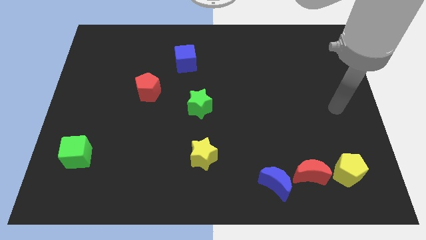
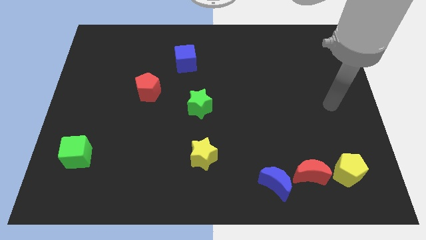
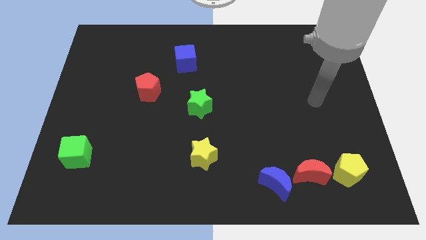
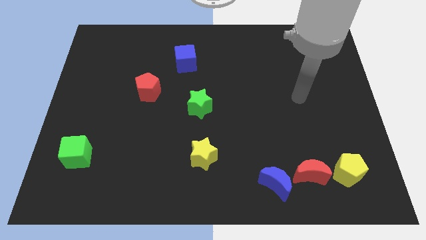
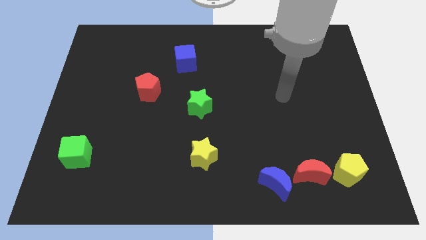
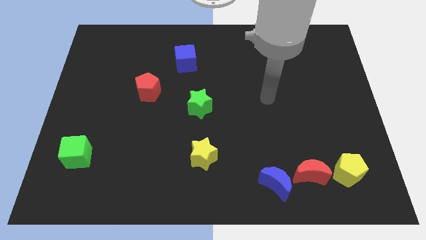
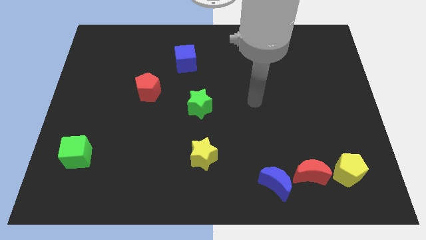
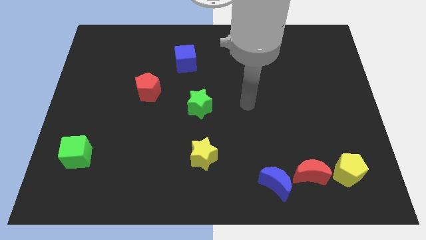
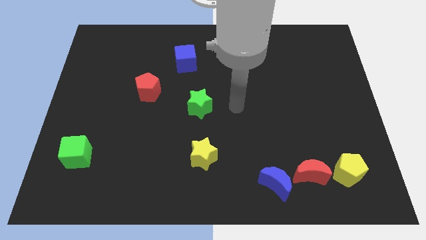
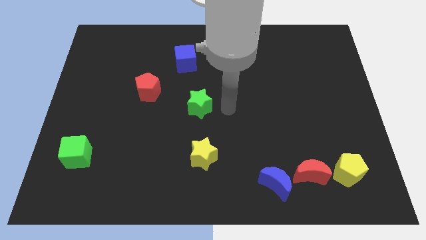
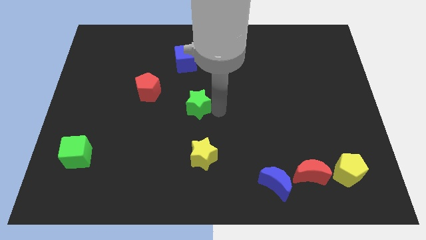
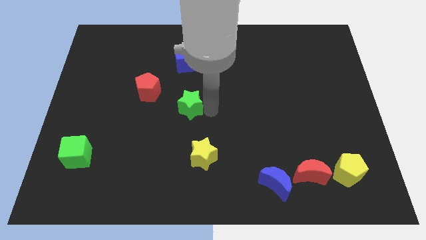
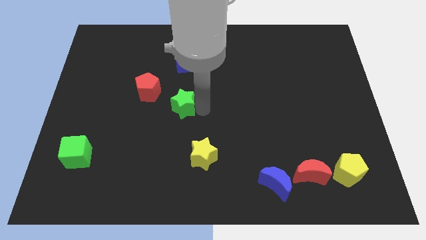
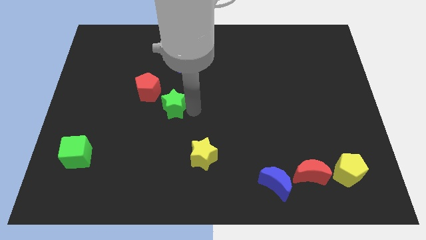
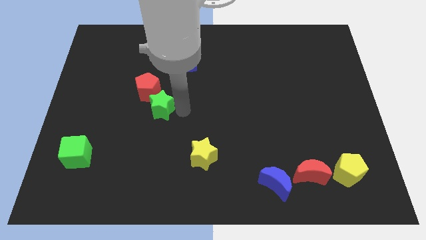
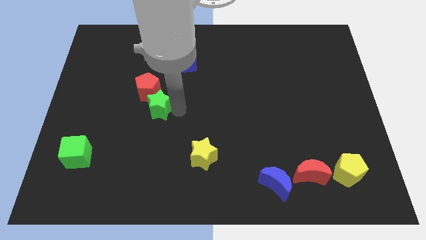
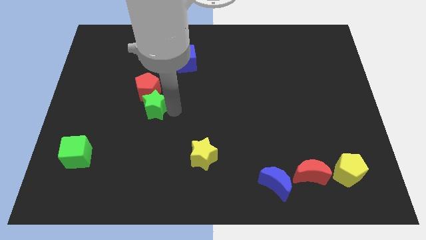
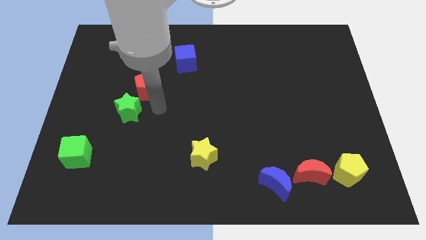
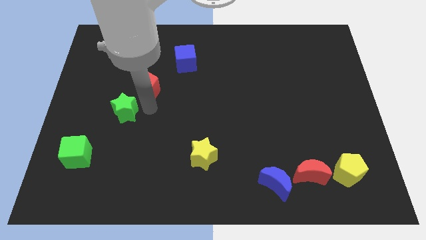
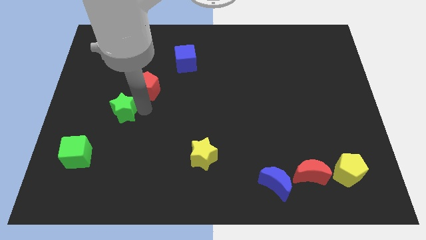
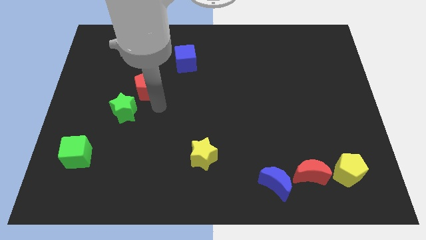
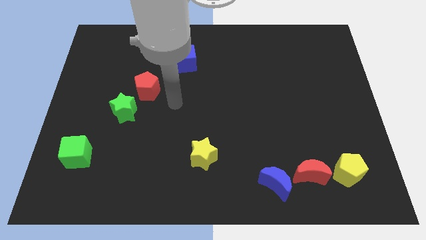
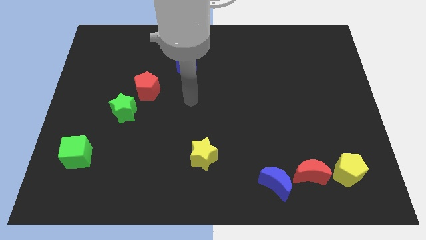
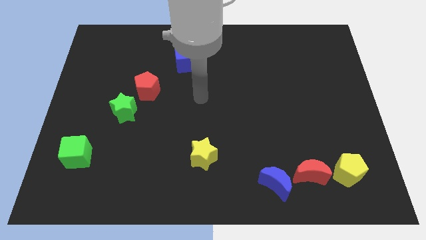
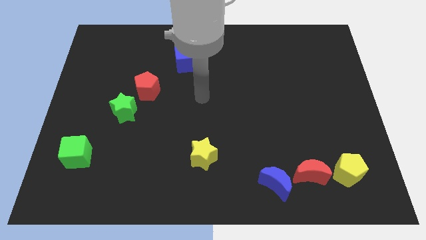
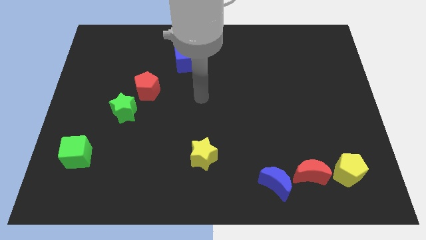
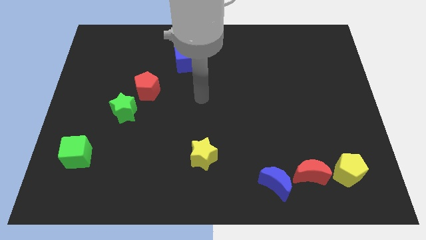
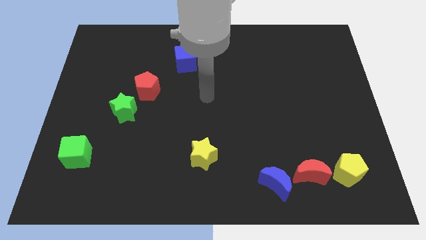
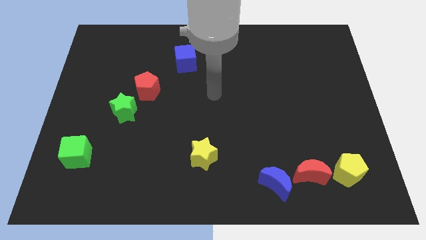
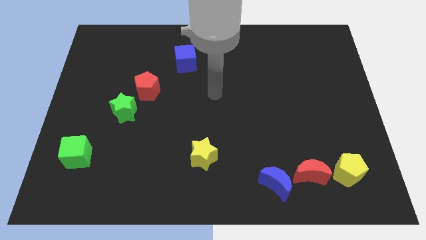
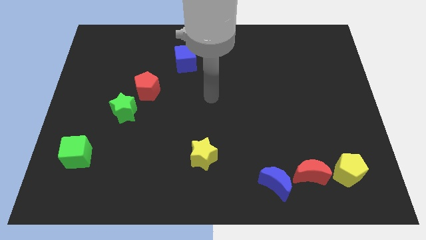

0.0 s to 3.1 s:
push the green star to the bottom left of the red pentagon

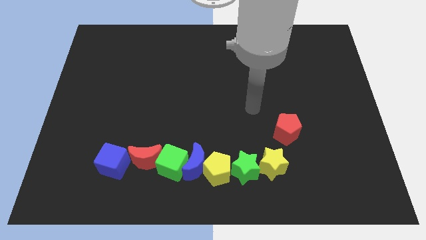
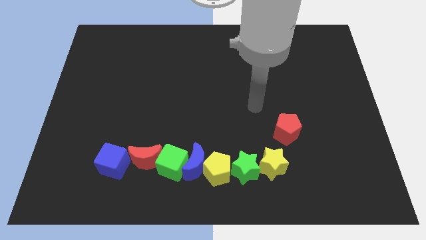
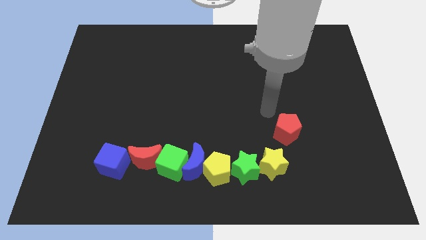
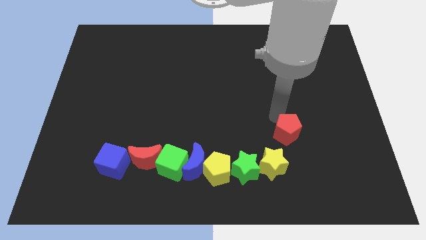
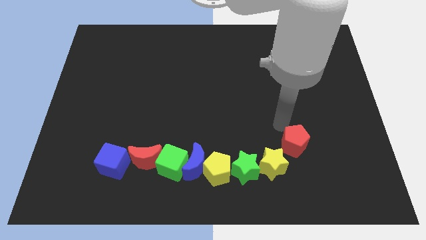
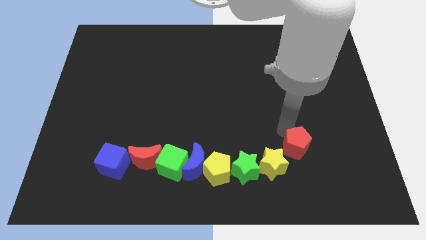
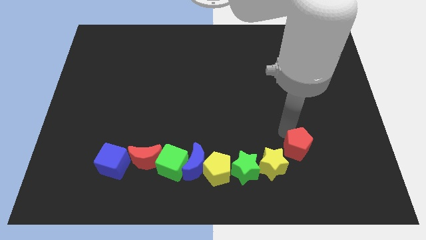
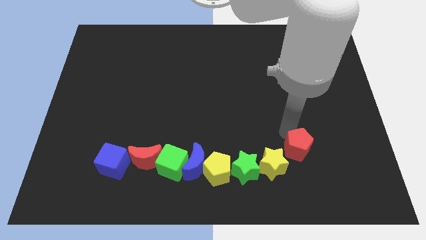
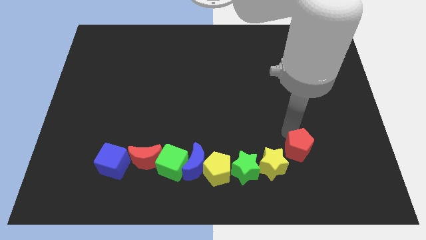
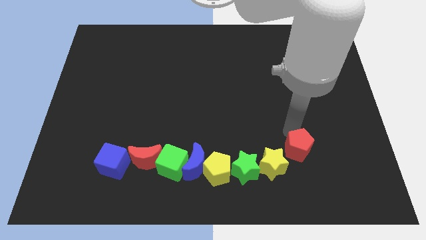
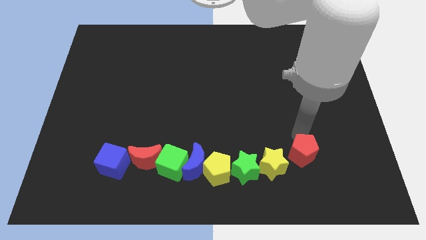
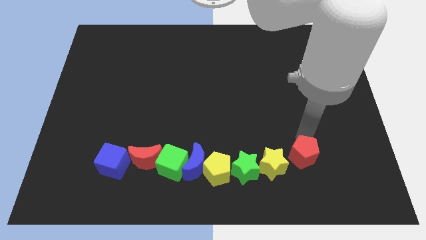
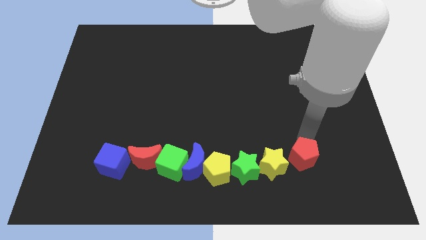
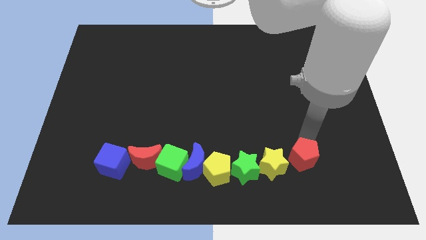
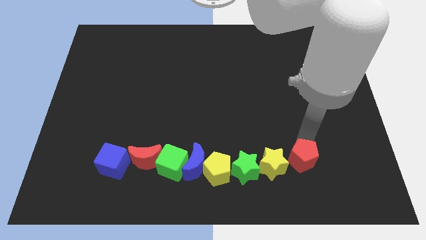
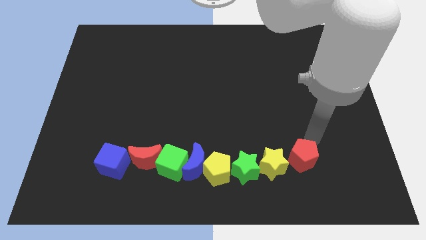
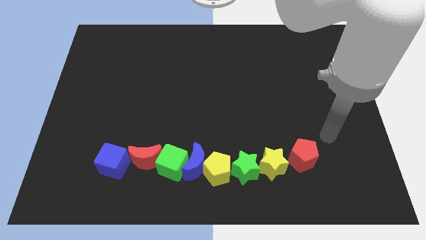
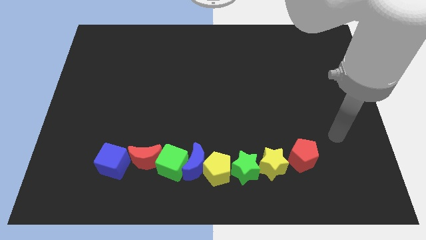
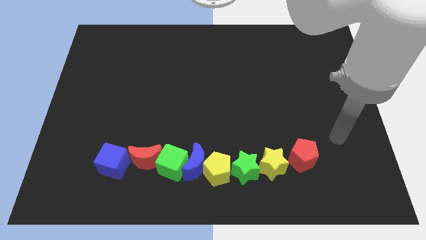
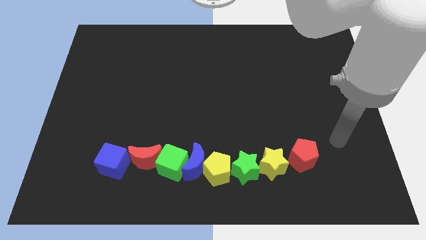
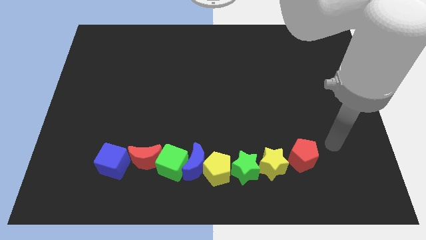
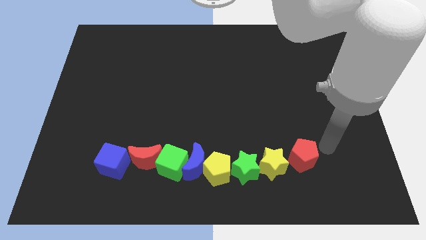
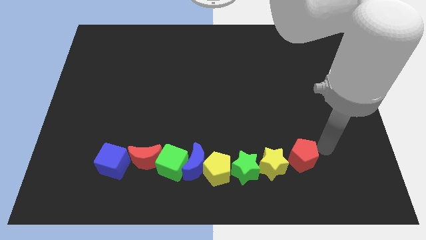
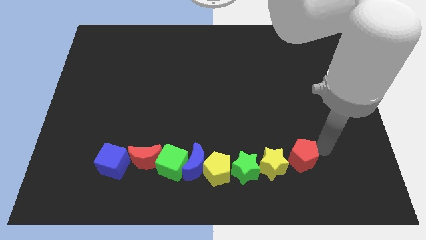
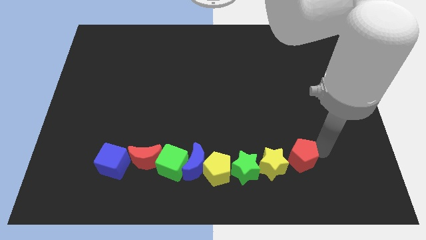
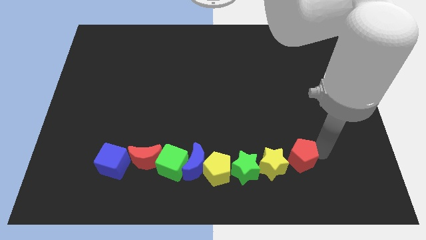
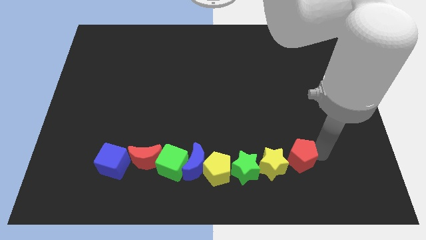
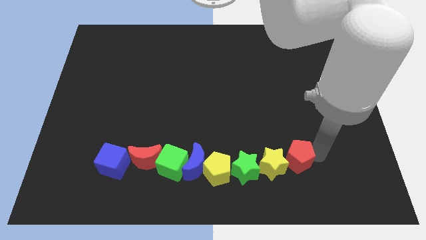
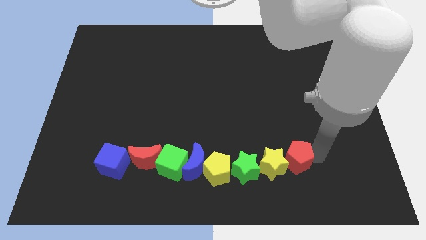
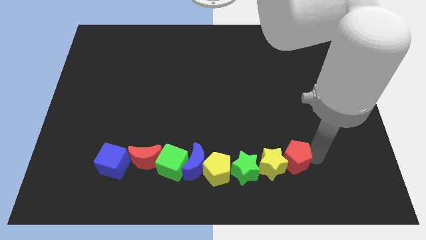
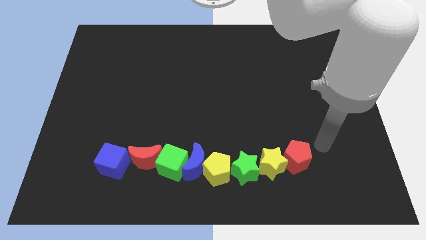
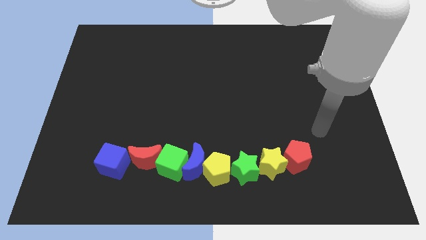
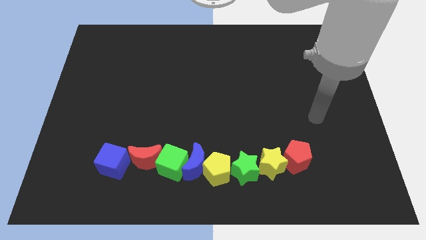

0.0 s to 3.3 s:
move the red pentagon to the right side of the yellow star

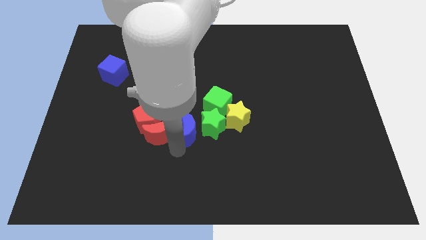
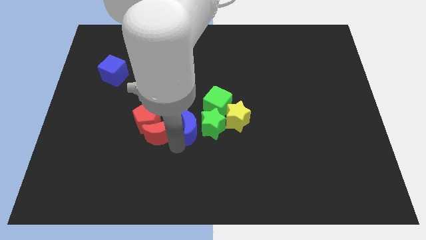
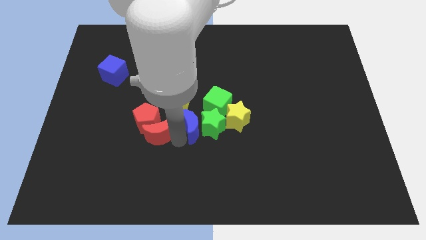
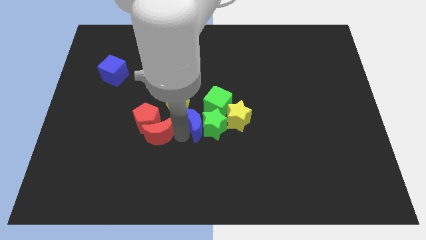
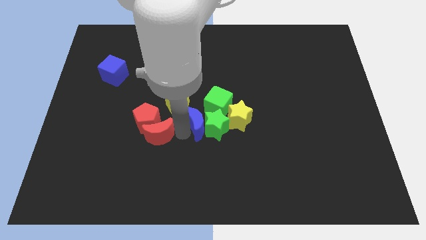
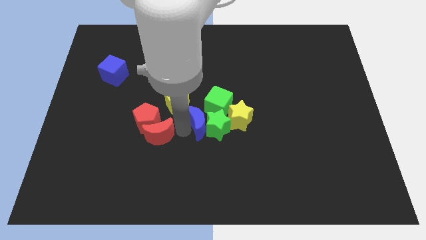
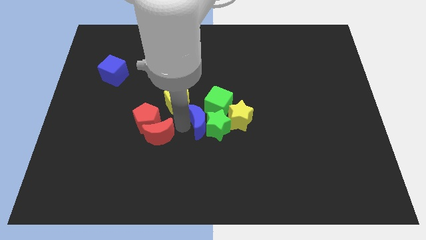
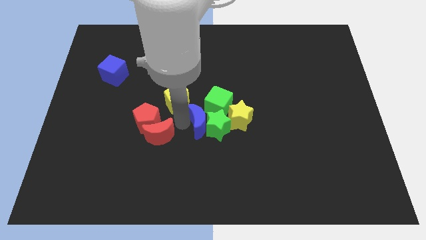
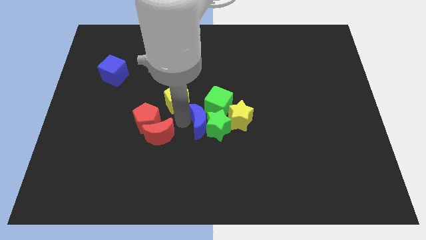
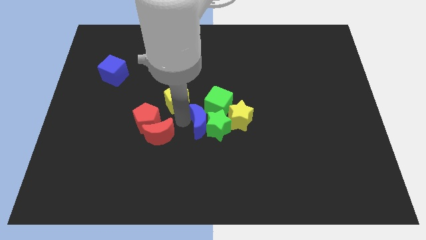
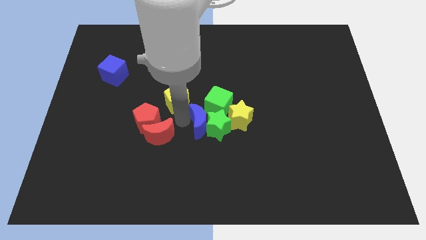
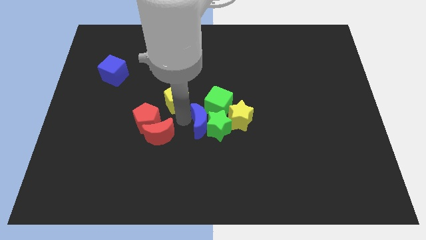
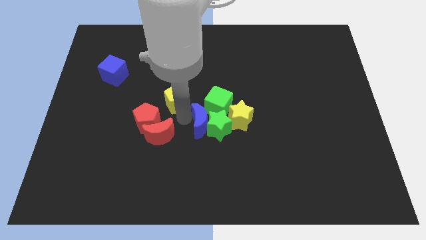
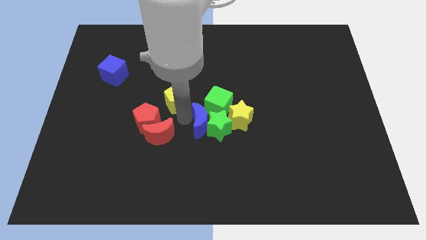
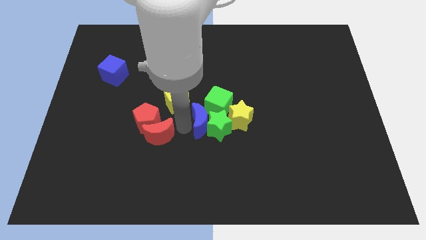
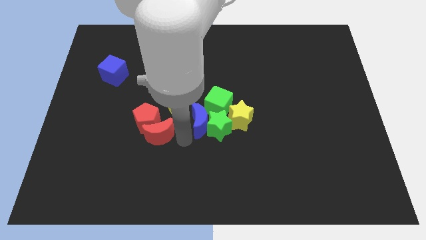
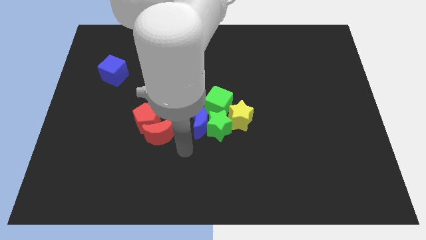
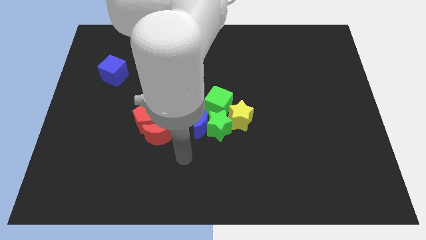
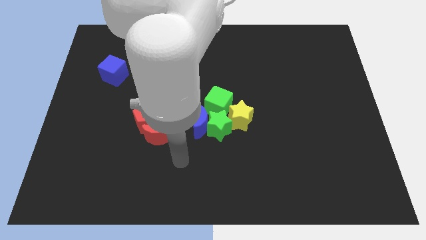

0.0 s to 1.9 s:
push blue moon into the group of blocks

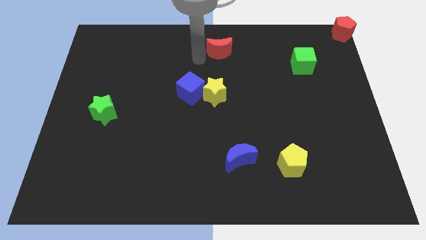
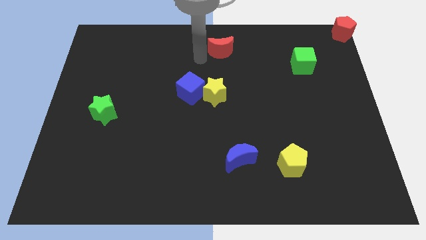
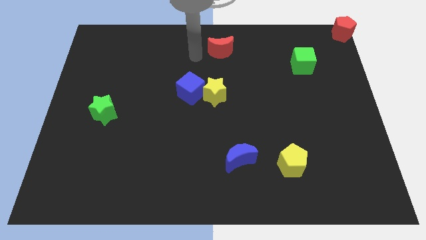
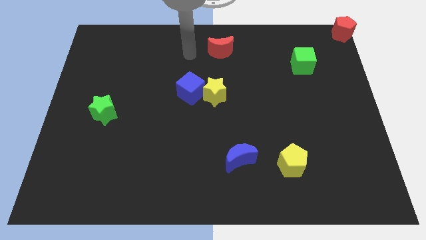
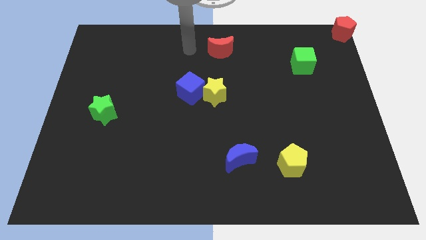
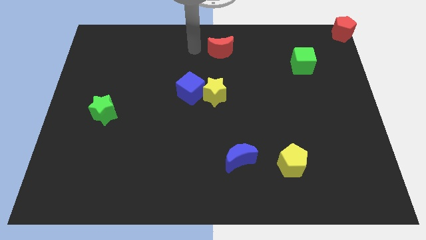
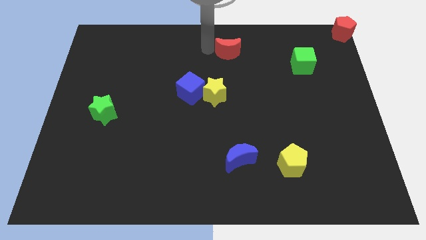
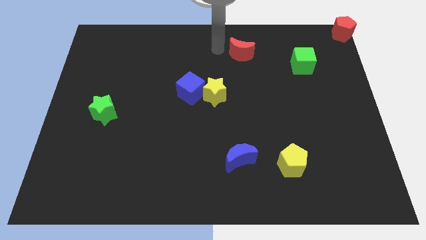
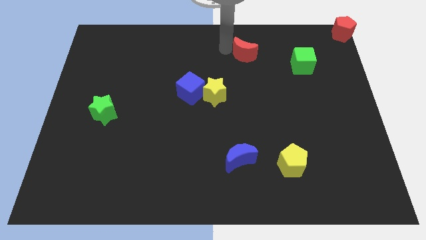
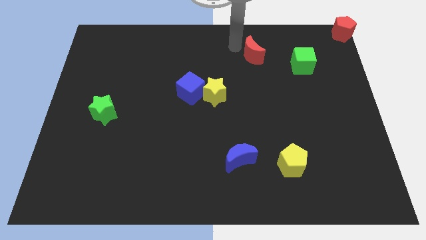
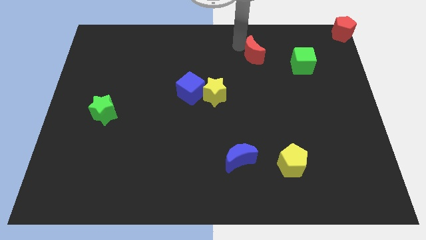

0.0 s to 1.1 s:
drag the red crescent towards the left side of the green cube
